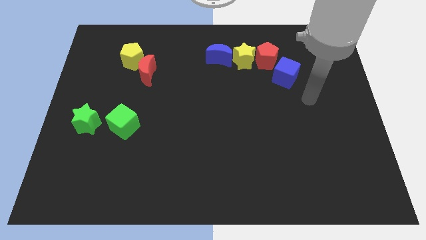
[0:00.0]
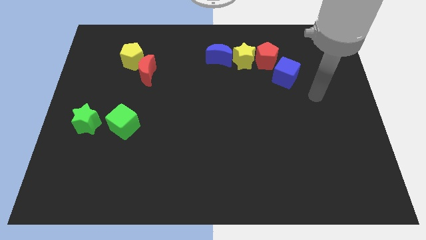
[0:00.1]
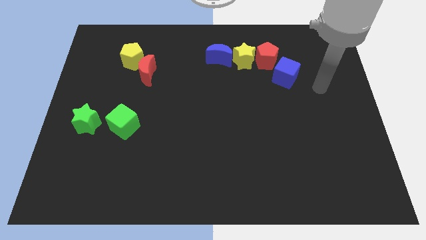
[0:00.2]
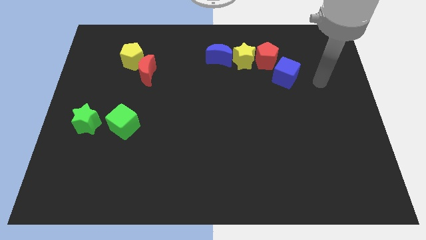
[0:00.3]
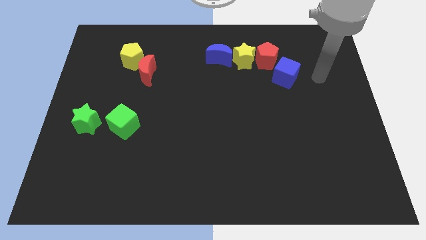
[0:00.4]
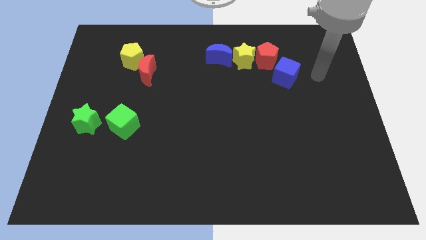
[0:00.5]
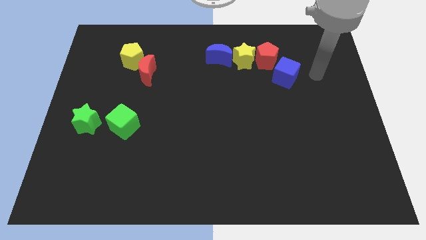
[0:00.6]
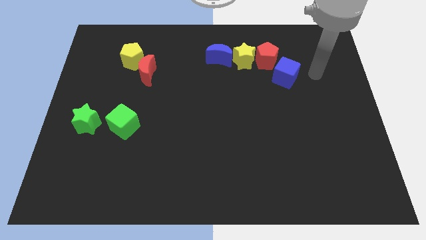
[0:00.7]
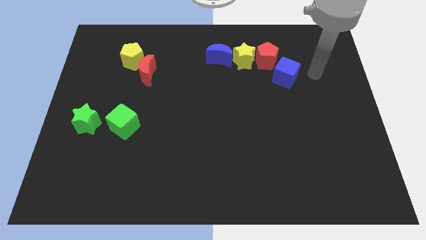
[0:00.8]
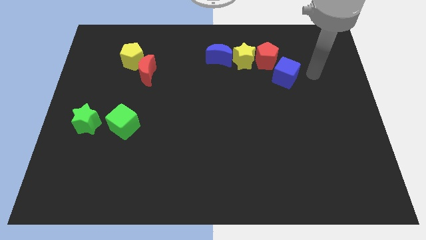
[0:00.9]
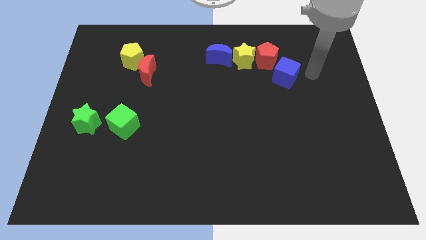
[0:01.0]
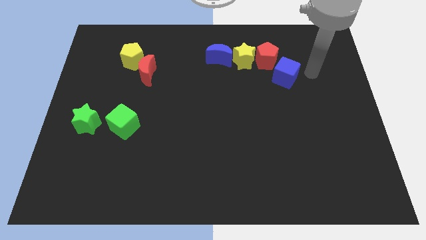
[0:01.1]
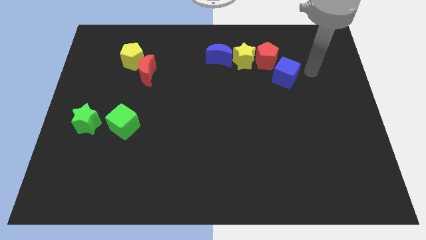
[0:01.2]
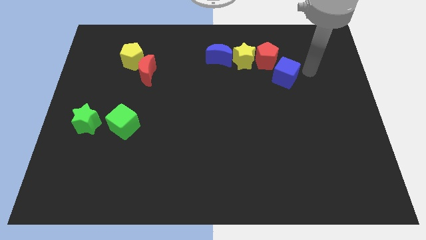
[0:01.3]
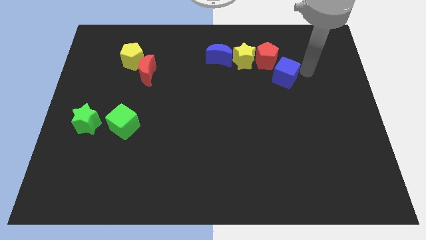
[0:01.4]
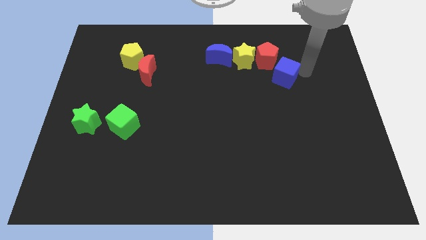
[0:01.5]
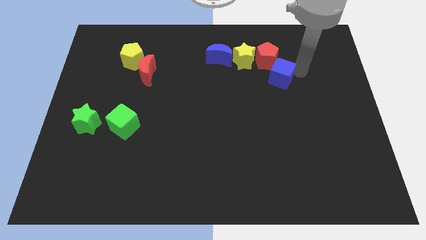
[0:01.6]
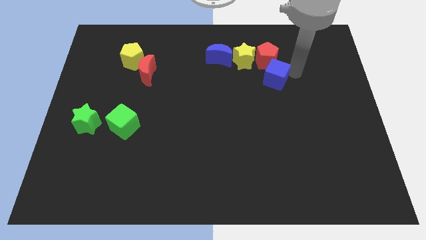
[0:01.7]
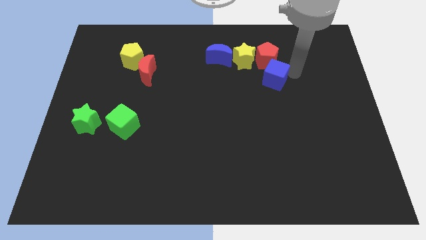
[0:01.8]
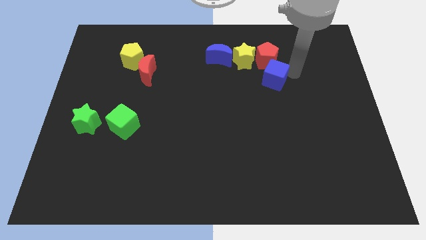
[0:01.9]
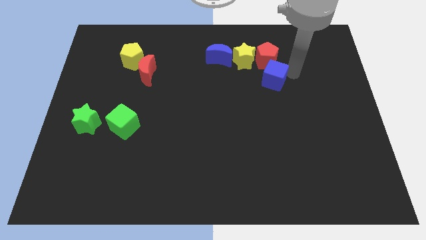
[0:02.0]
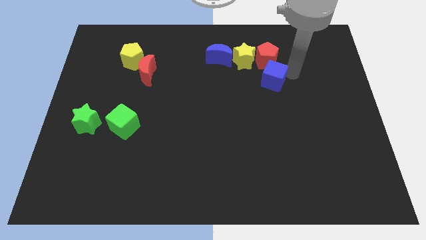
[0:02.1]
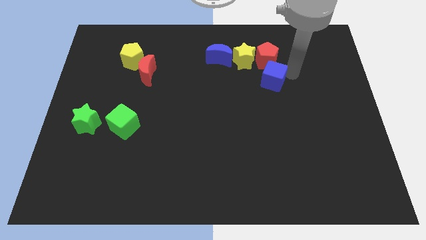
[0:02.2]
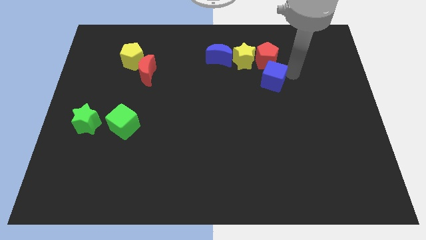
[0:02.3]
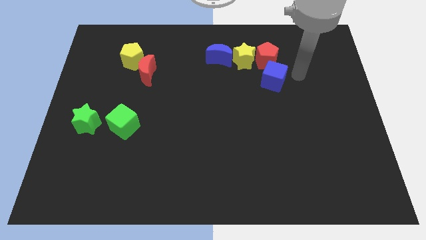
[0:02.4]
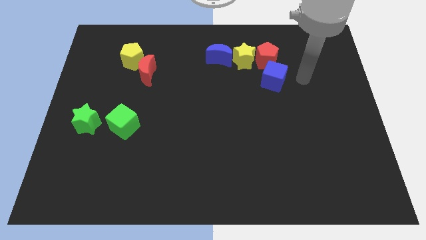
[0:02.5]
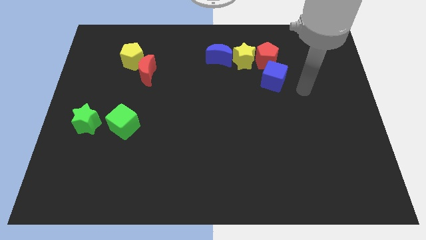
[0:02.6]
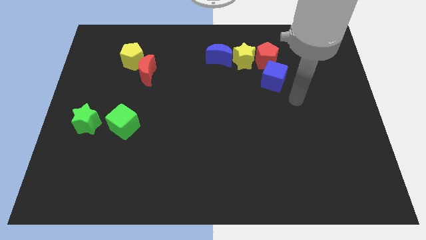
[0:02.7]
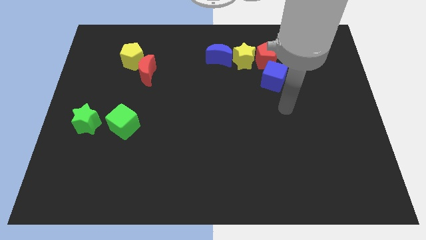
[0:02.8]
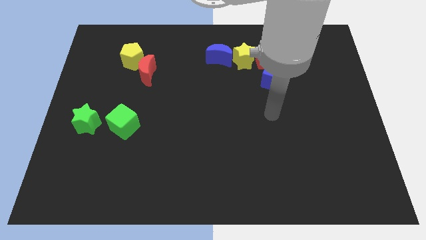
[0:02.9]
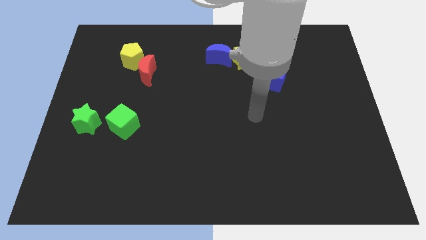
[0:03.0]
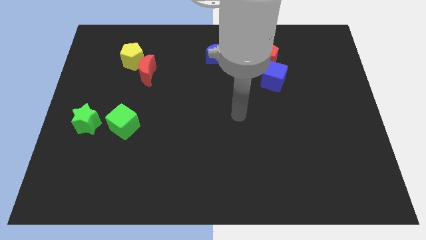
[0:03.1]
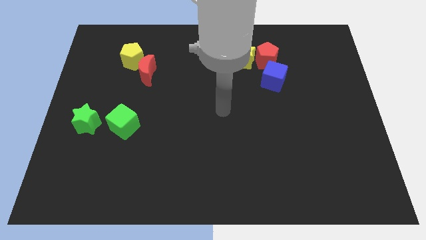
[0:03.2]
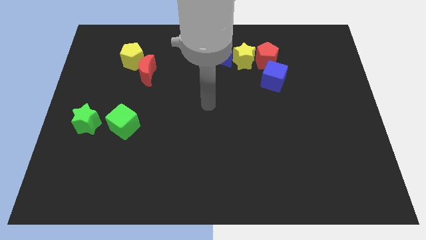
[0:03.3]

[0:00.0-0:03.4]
push the blue cube to the bottom right side of the red pentagon

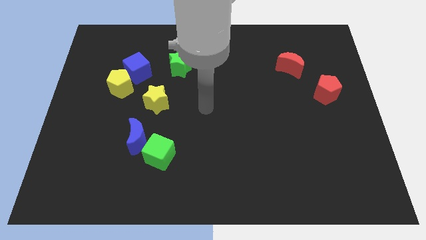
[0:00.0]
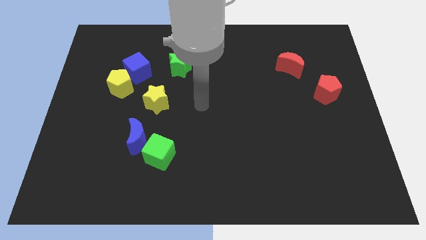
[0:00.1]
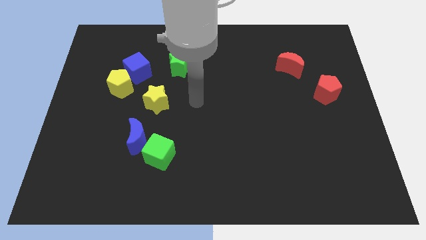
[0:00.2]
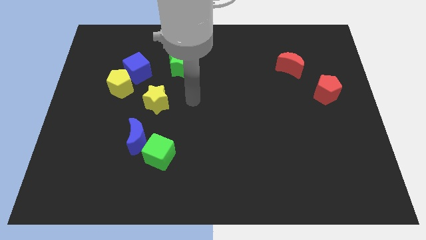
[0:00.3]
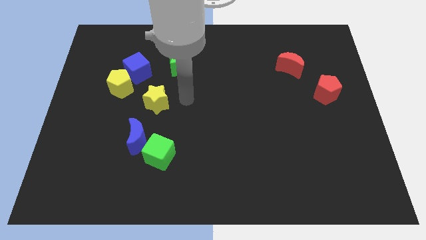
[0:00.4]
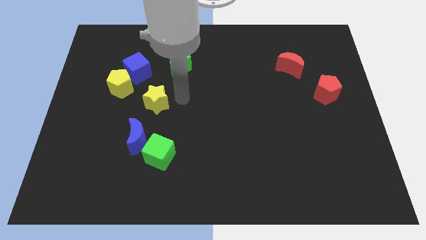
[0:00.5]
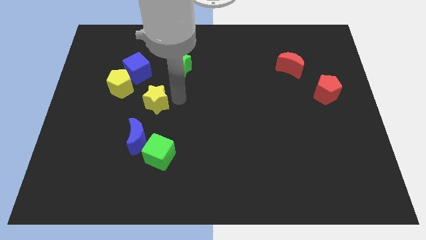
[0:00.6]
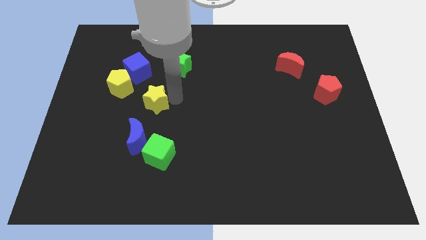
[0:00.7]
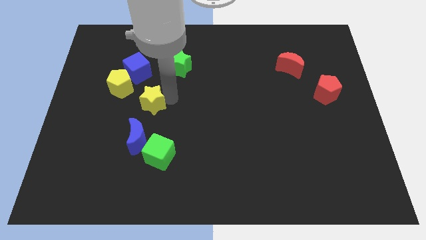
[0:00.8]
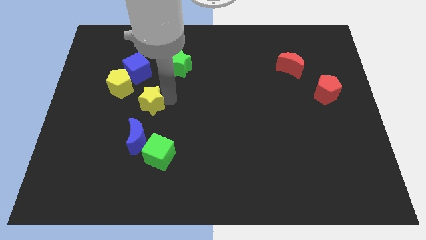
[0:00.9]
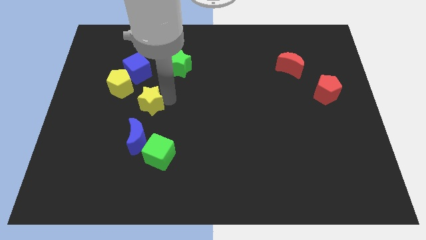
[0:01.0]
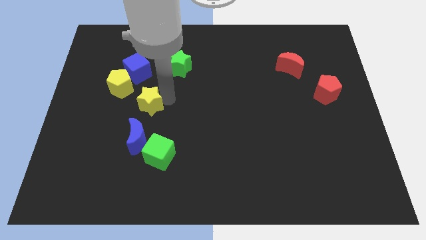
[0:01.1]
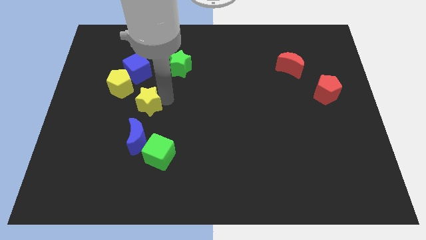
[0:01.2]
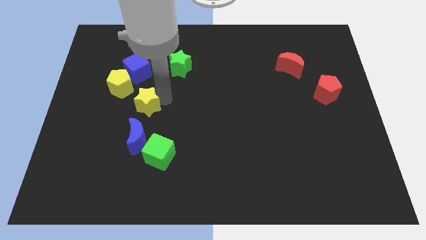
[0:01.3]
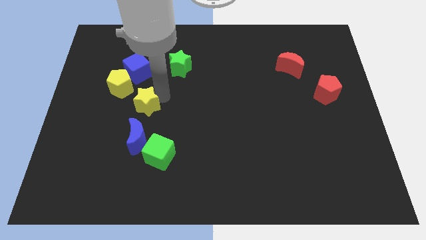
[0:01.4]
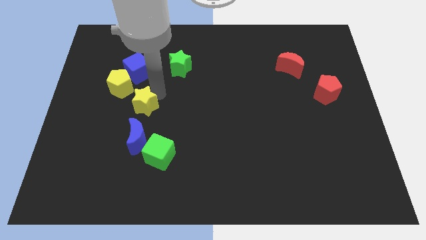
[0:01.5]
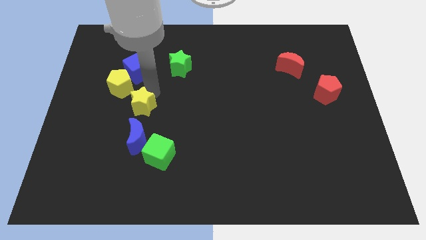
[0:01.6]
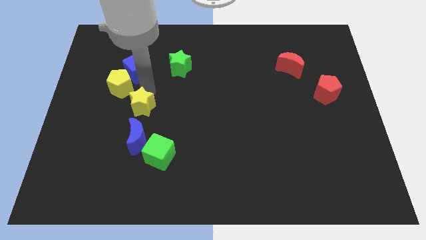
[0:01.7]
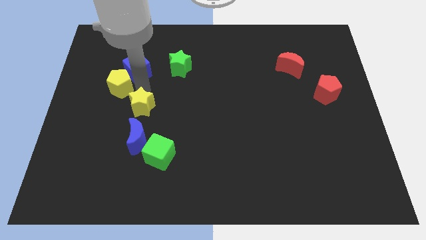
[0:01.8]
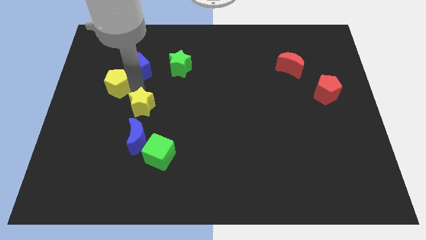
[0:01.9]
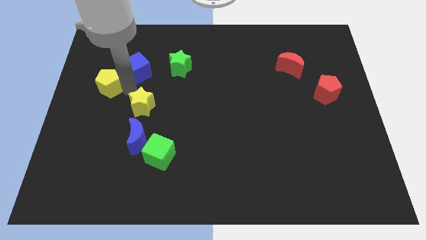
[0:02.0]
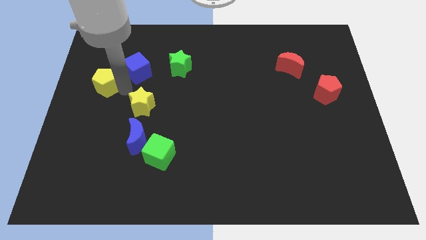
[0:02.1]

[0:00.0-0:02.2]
place the yellow star above the blue crescent

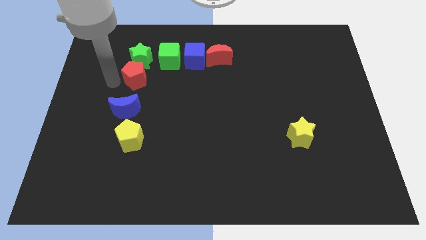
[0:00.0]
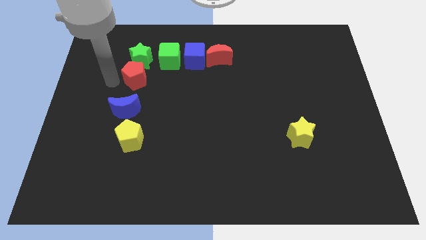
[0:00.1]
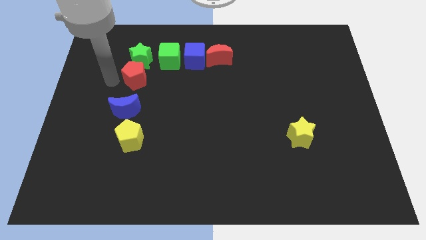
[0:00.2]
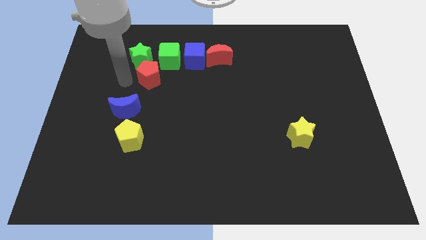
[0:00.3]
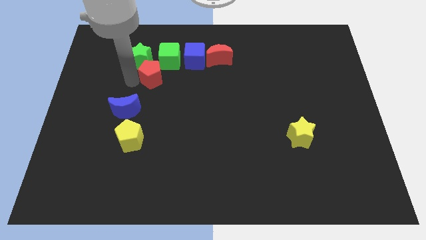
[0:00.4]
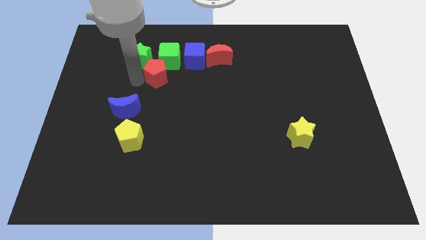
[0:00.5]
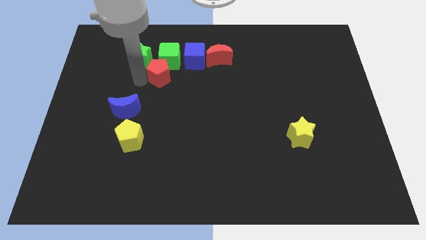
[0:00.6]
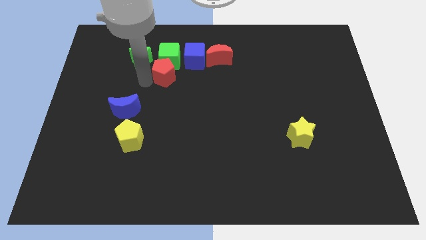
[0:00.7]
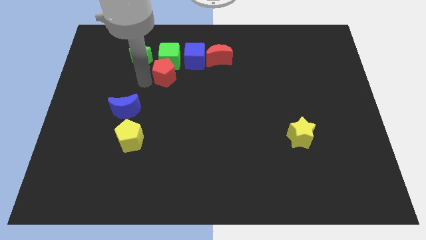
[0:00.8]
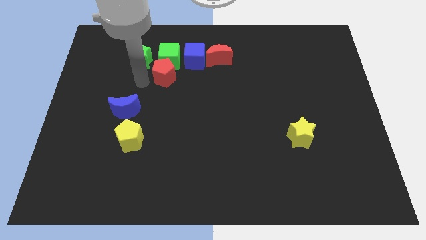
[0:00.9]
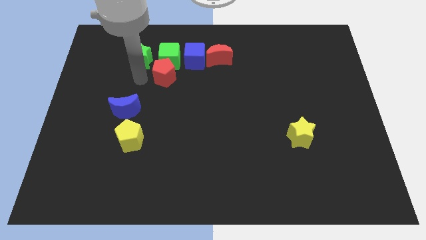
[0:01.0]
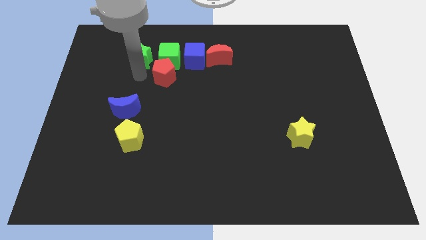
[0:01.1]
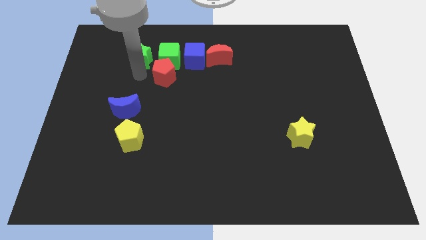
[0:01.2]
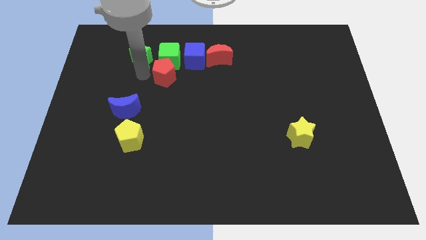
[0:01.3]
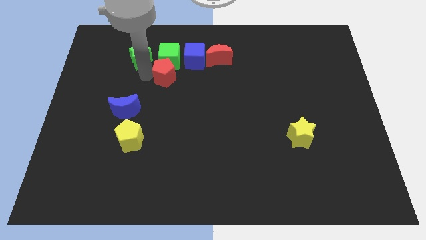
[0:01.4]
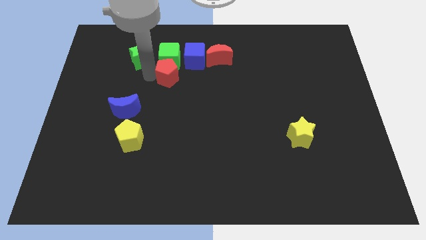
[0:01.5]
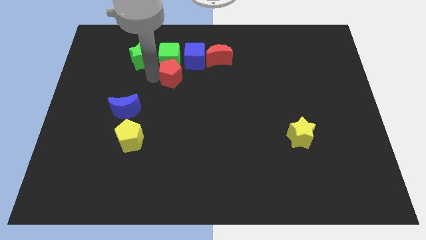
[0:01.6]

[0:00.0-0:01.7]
move the red pentagon to the bottom of the green cube

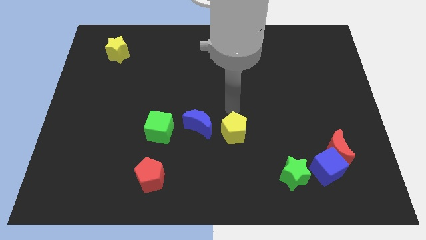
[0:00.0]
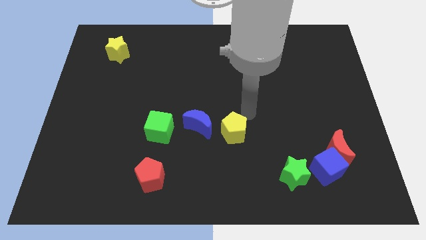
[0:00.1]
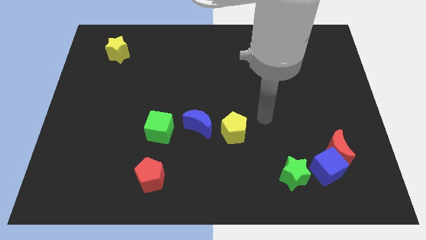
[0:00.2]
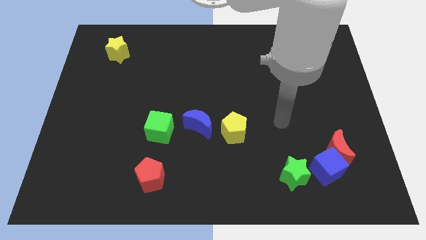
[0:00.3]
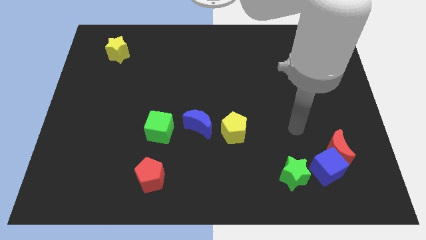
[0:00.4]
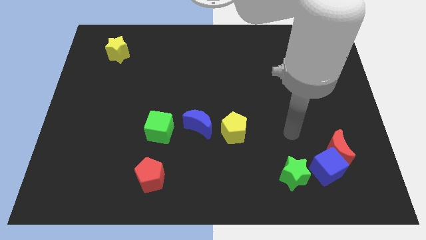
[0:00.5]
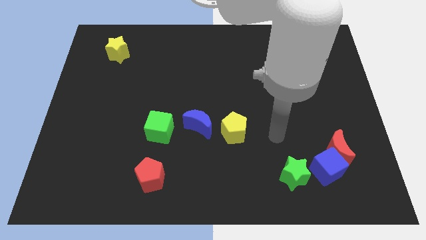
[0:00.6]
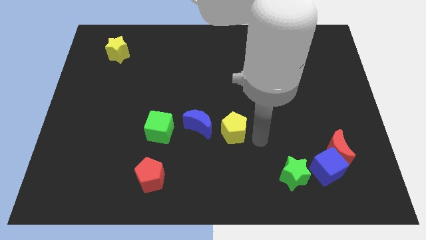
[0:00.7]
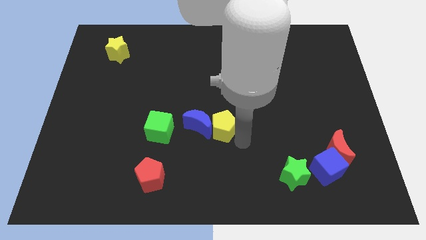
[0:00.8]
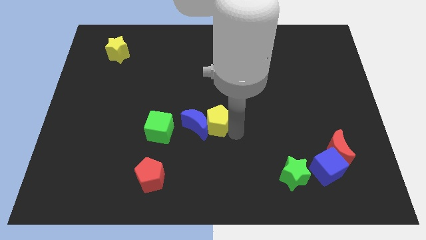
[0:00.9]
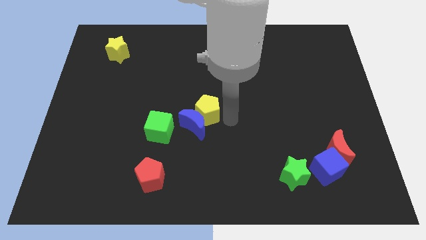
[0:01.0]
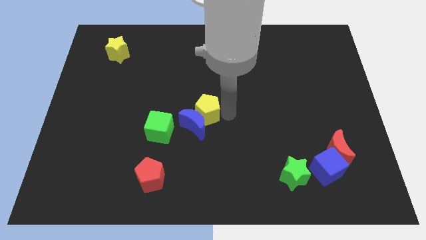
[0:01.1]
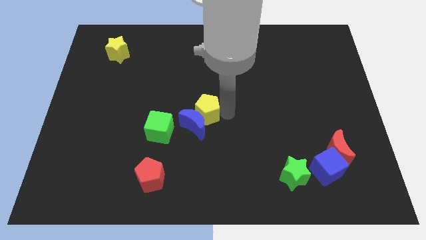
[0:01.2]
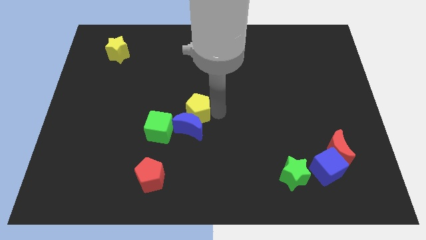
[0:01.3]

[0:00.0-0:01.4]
move the yellow pentagon above the blue crescent

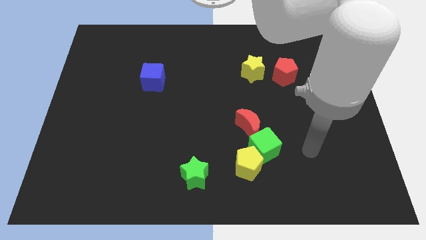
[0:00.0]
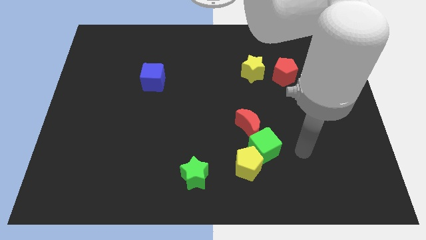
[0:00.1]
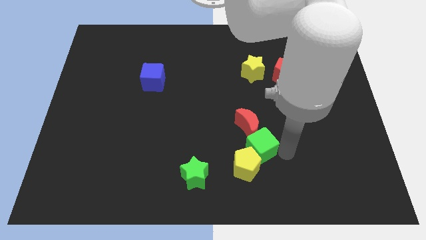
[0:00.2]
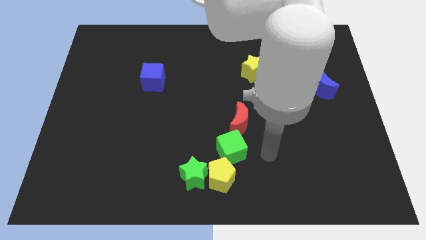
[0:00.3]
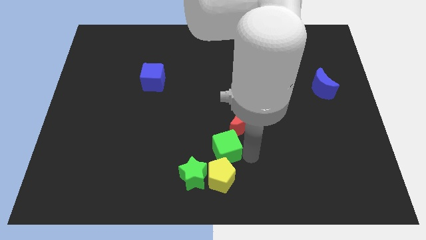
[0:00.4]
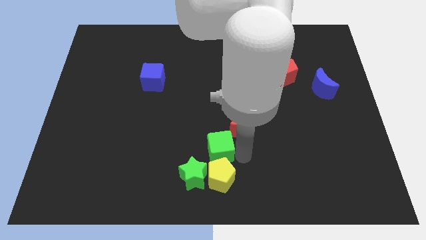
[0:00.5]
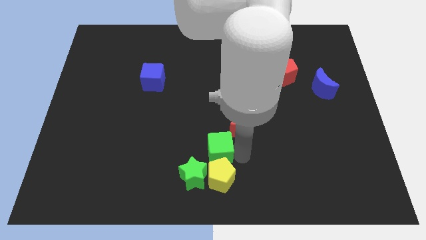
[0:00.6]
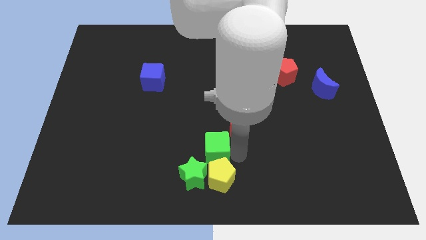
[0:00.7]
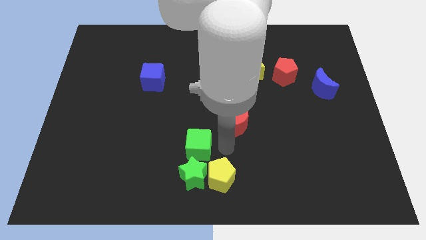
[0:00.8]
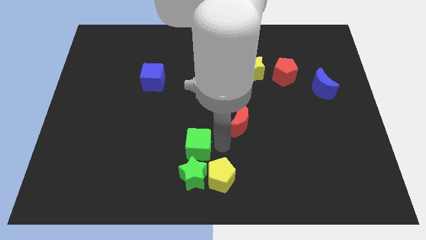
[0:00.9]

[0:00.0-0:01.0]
place the green cube above the green star
